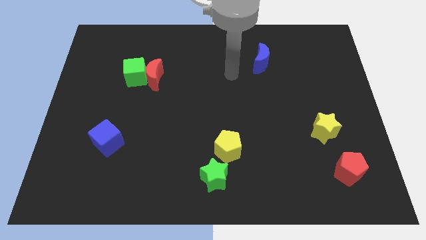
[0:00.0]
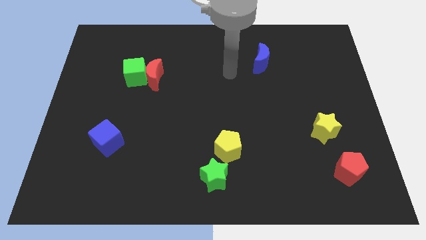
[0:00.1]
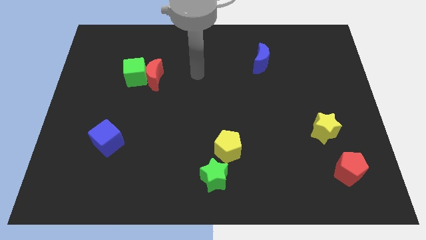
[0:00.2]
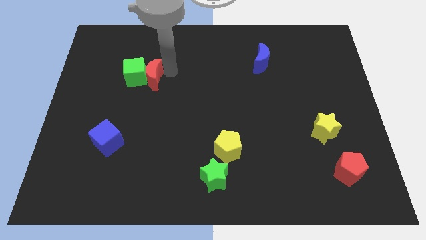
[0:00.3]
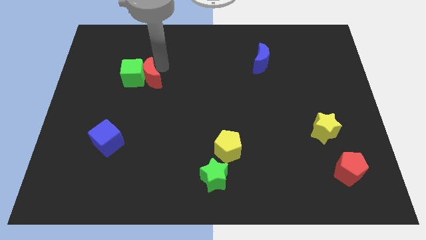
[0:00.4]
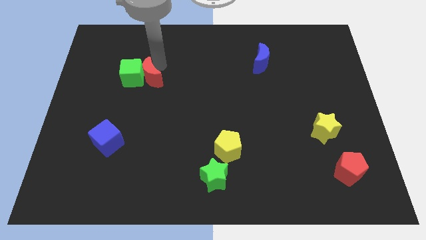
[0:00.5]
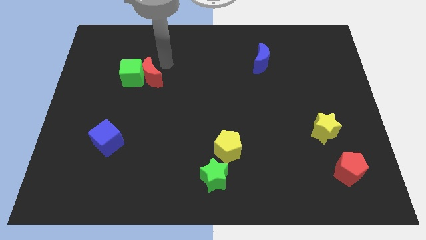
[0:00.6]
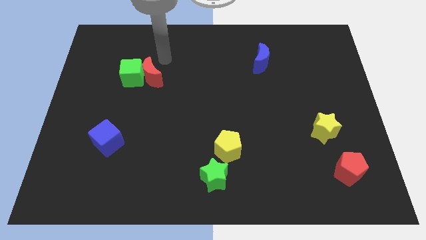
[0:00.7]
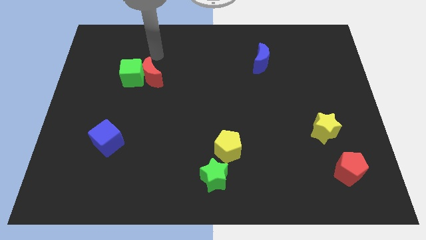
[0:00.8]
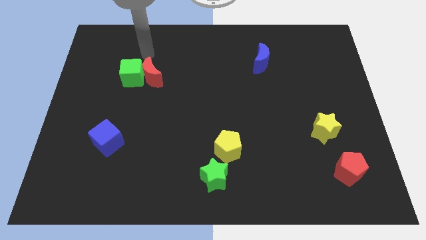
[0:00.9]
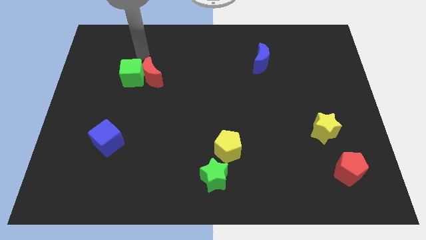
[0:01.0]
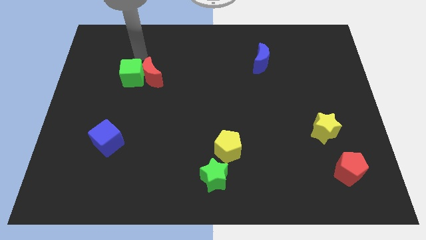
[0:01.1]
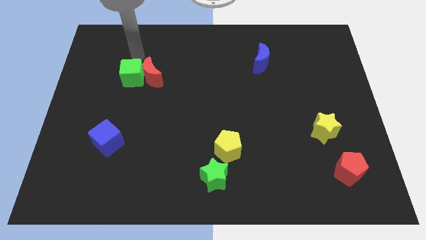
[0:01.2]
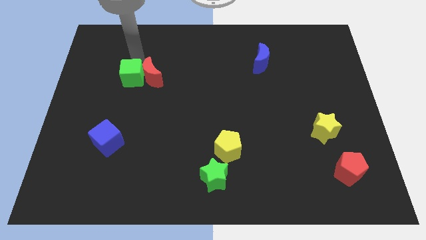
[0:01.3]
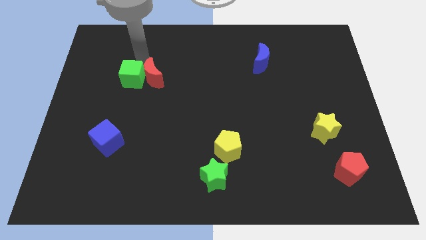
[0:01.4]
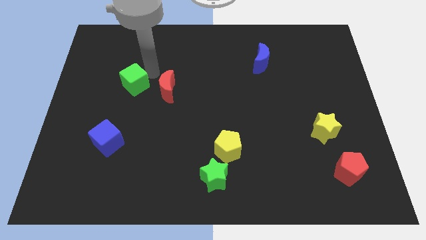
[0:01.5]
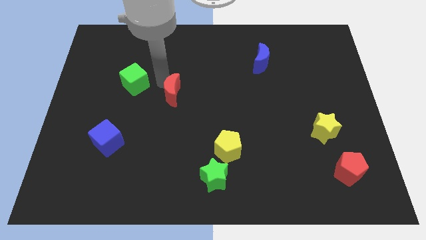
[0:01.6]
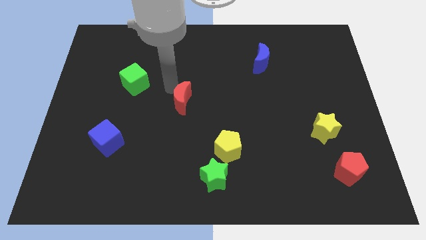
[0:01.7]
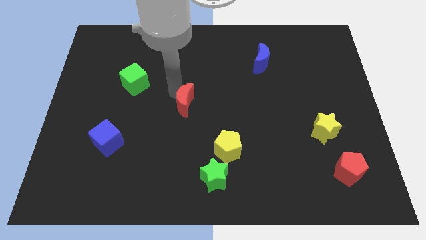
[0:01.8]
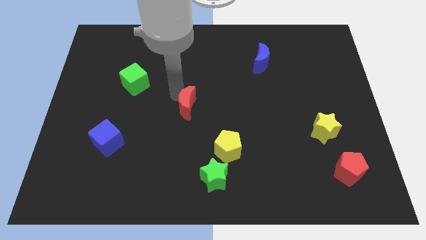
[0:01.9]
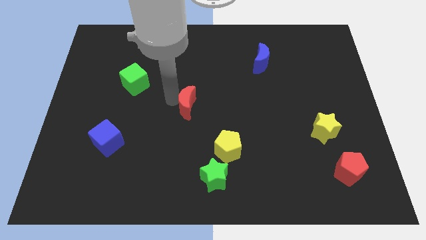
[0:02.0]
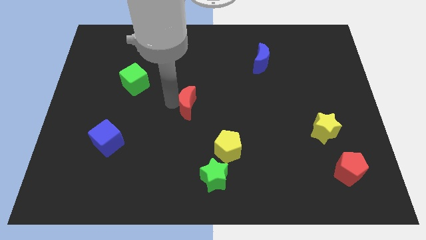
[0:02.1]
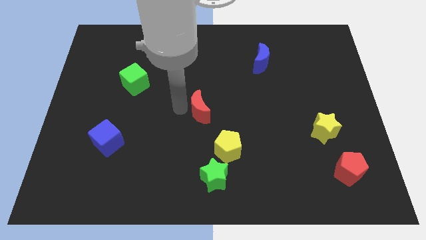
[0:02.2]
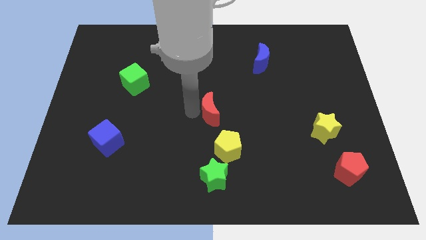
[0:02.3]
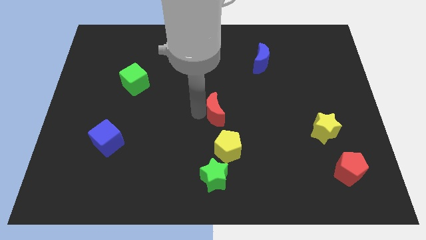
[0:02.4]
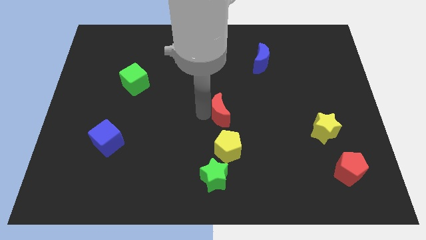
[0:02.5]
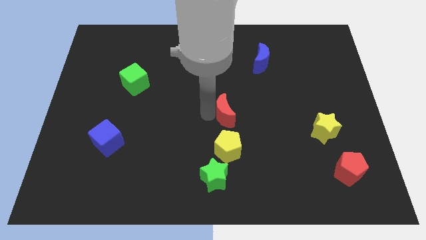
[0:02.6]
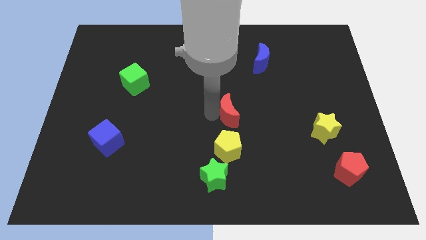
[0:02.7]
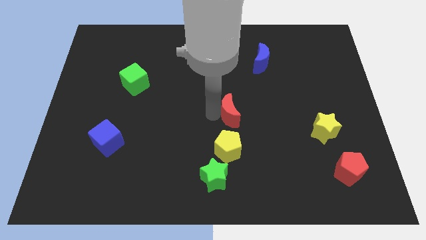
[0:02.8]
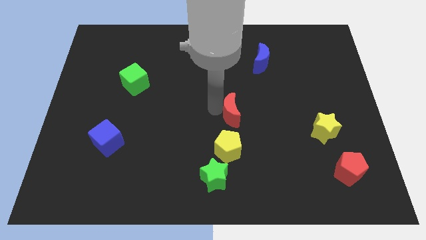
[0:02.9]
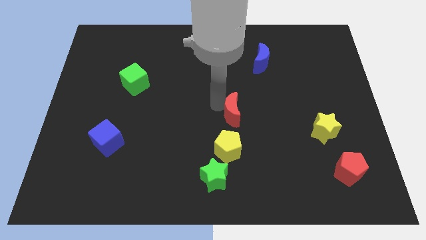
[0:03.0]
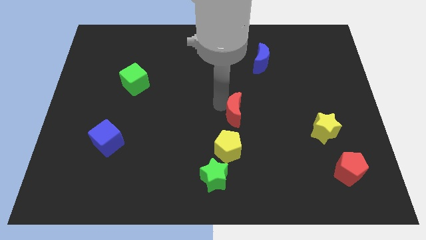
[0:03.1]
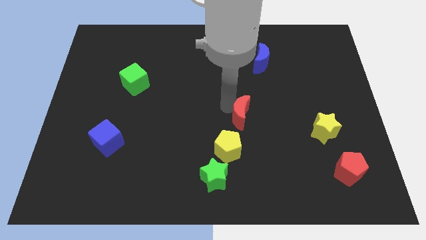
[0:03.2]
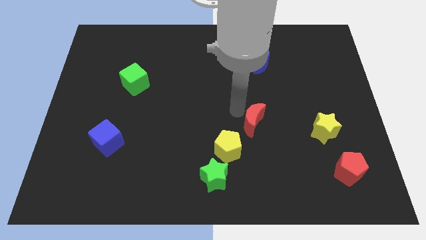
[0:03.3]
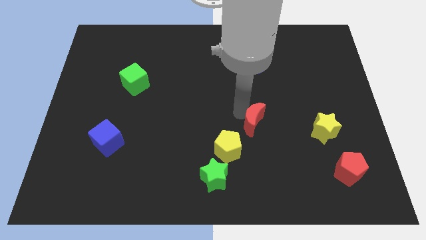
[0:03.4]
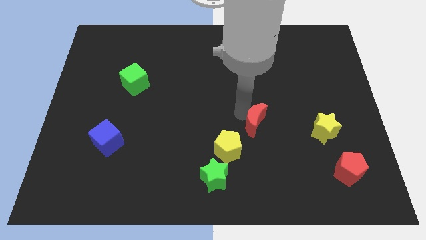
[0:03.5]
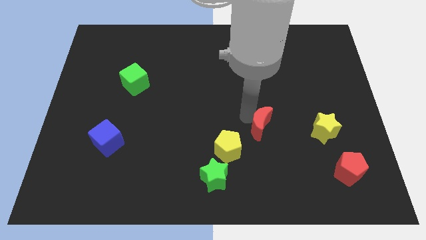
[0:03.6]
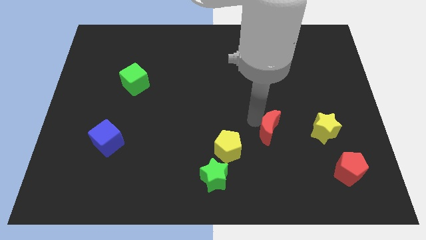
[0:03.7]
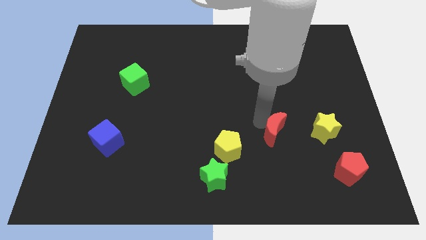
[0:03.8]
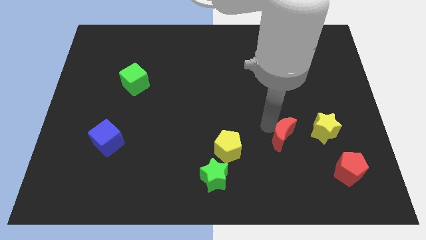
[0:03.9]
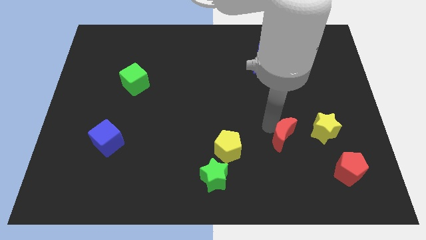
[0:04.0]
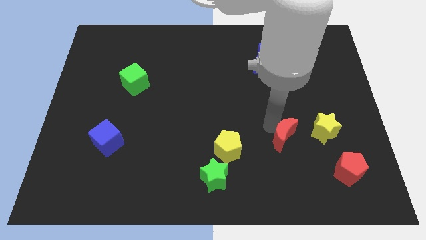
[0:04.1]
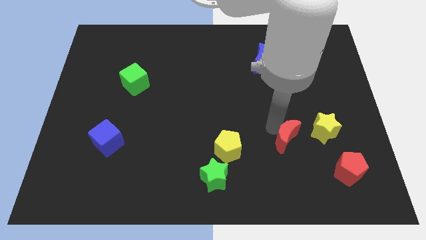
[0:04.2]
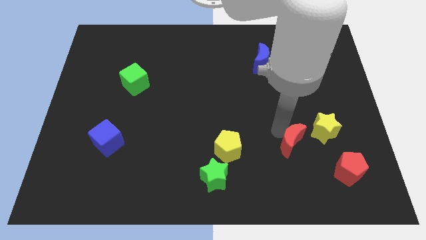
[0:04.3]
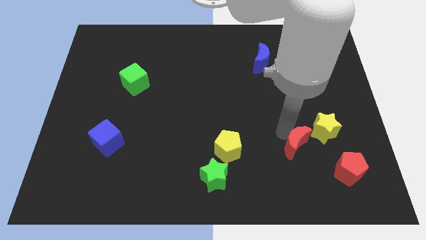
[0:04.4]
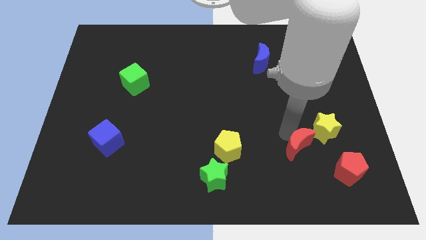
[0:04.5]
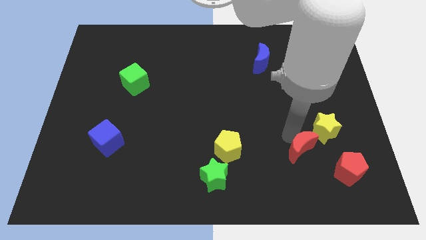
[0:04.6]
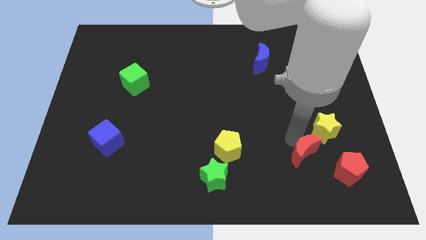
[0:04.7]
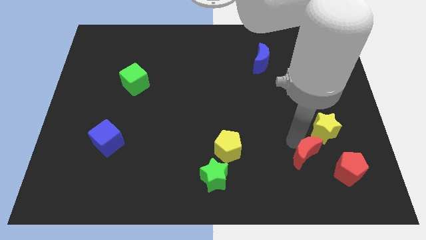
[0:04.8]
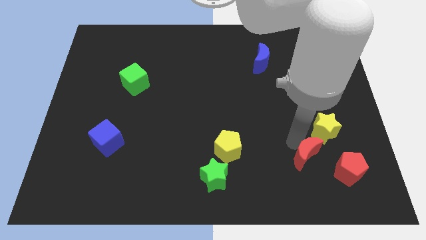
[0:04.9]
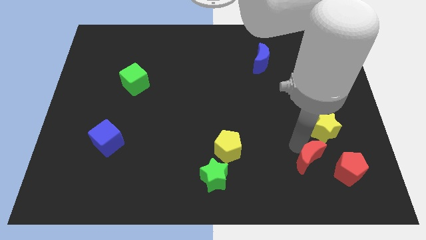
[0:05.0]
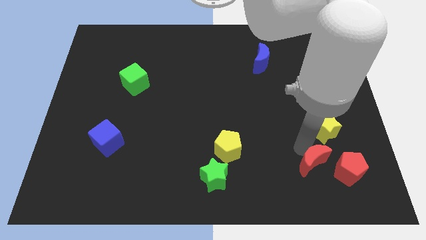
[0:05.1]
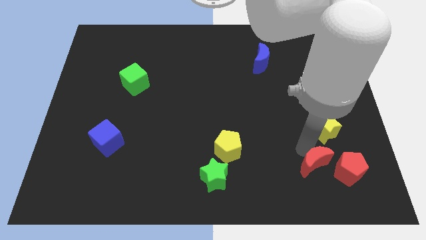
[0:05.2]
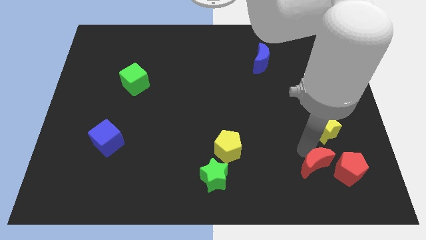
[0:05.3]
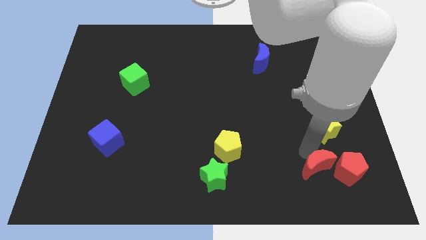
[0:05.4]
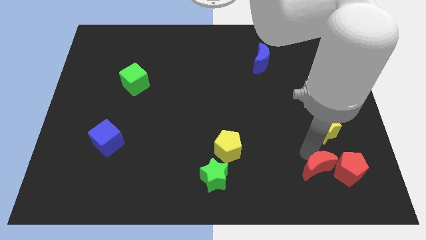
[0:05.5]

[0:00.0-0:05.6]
push the red moon towards the red pentagon

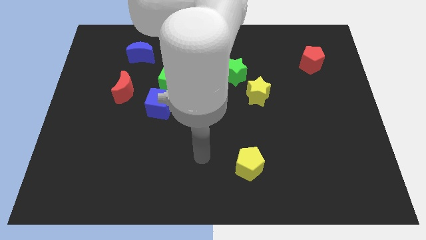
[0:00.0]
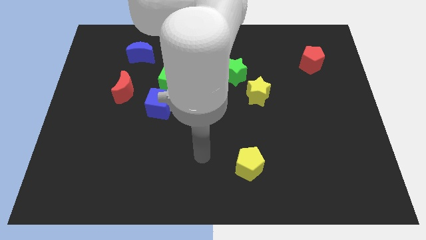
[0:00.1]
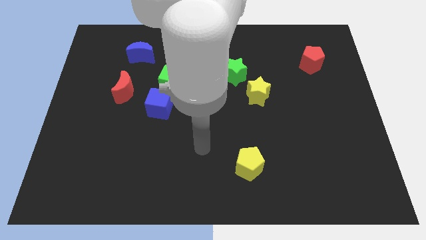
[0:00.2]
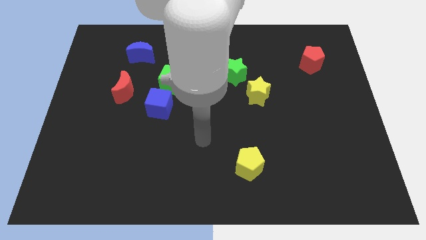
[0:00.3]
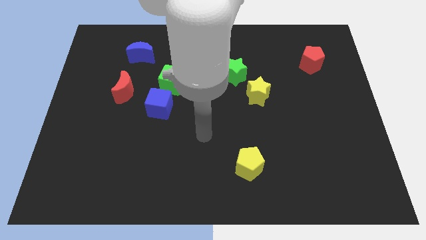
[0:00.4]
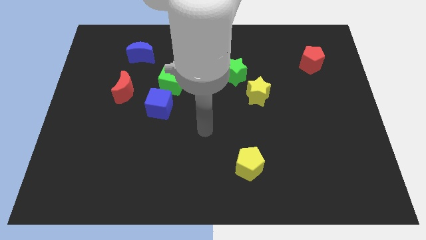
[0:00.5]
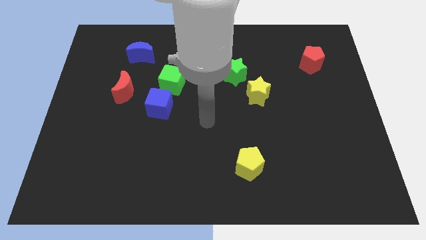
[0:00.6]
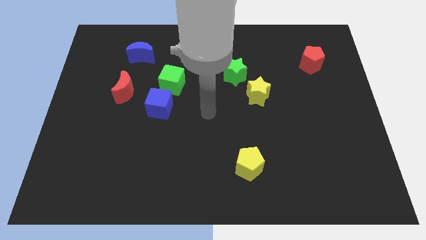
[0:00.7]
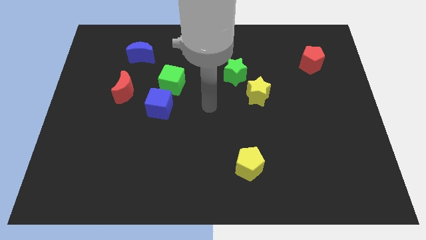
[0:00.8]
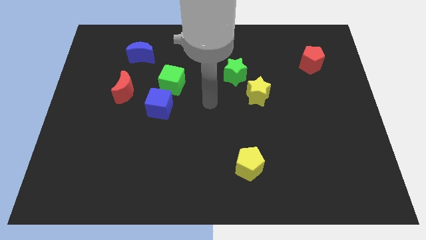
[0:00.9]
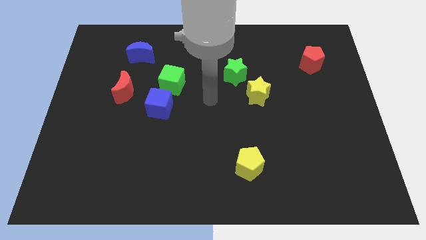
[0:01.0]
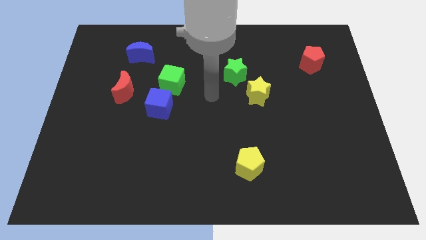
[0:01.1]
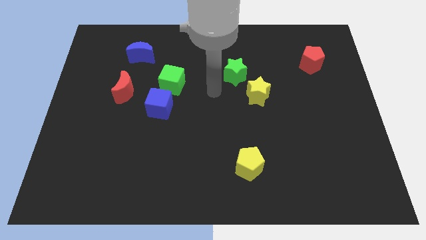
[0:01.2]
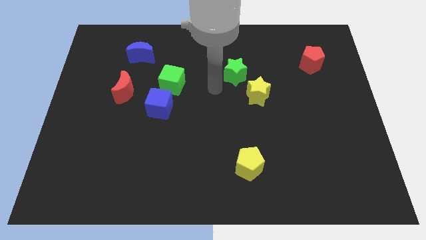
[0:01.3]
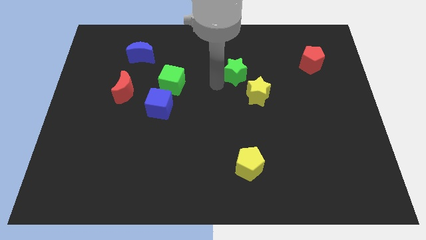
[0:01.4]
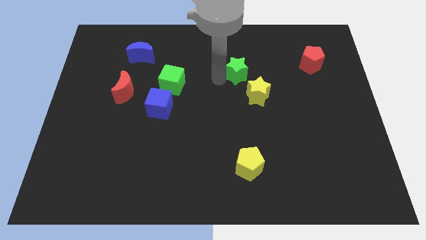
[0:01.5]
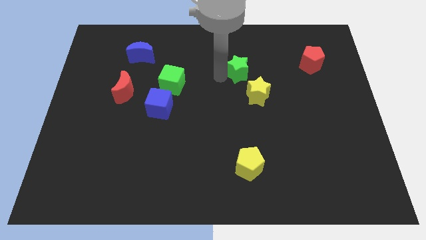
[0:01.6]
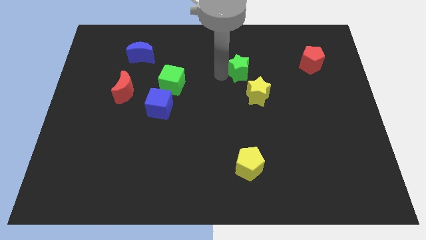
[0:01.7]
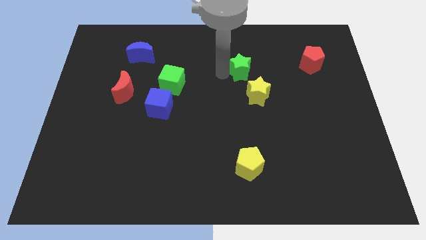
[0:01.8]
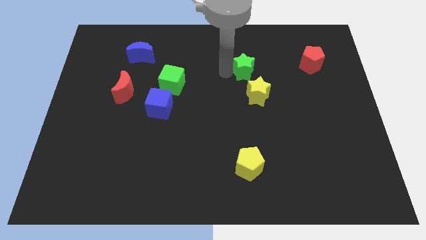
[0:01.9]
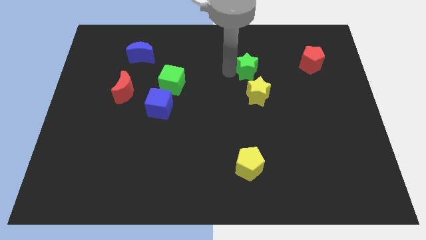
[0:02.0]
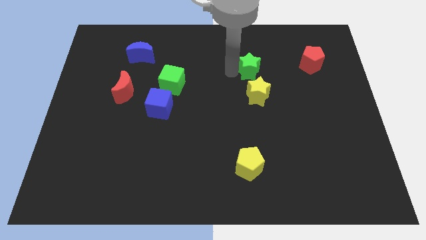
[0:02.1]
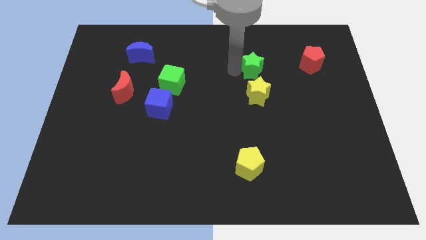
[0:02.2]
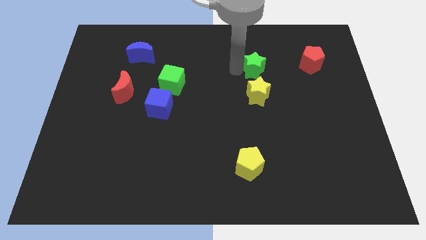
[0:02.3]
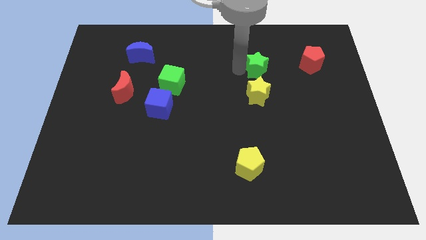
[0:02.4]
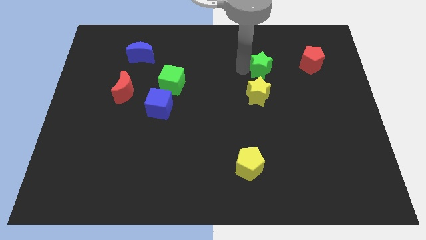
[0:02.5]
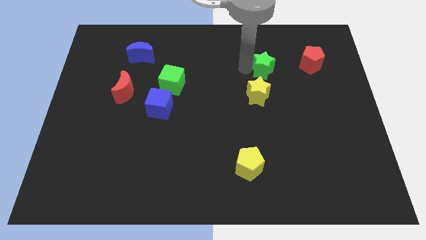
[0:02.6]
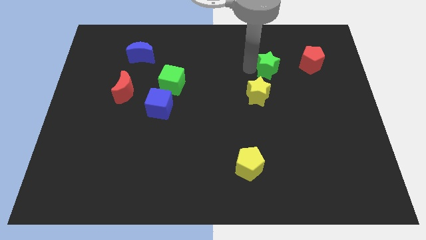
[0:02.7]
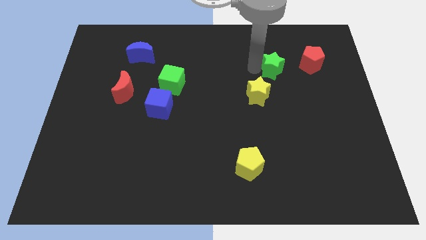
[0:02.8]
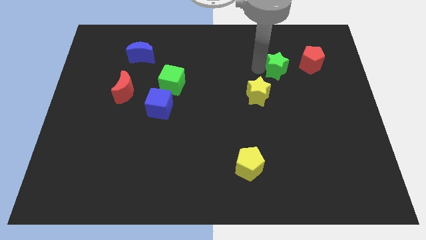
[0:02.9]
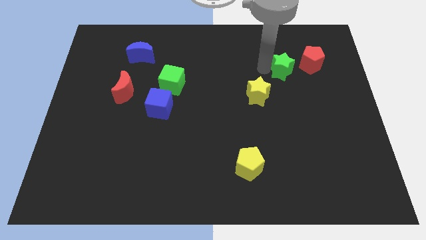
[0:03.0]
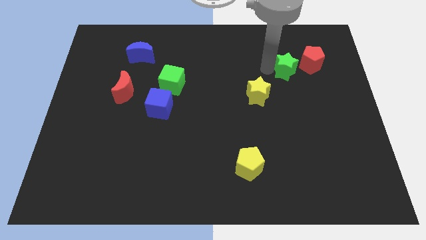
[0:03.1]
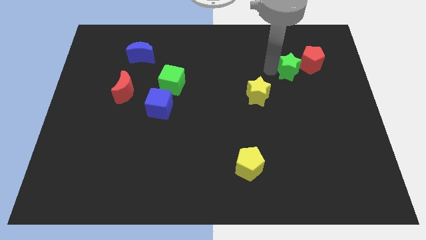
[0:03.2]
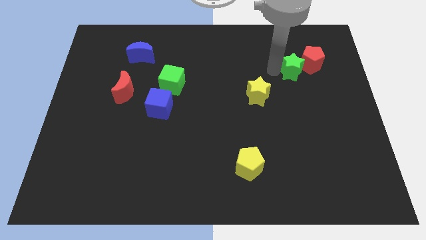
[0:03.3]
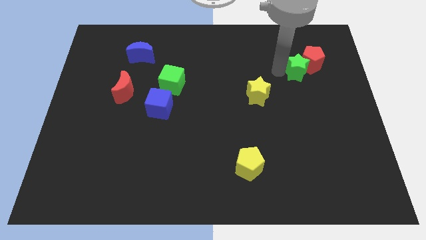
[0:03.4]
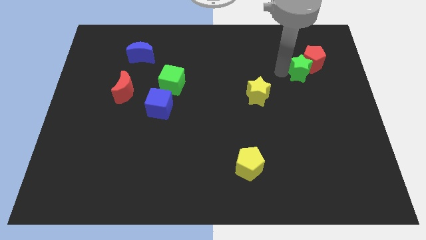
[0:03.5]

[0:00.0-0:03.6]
put the green star towards the red pentagon
